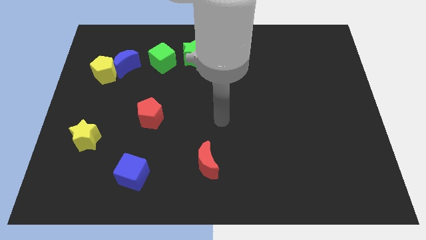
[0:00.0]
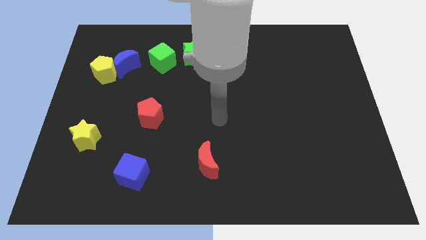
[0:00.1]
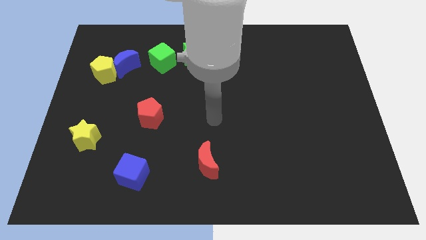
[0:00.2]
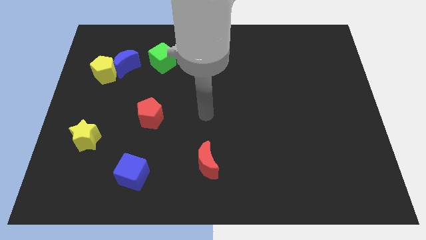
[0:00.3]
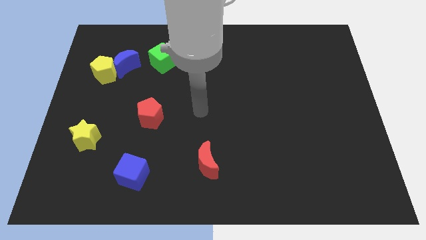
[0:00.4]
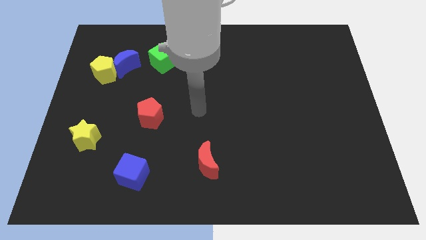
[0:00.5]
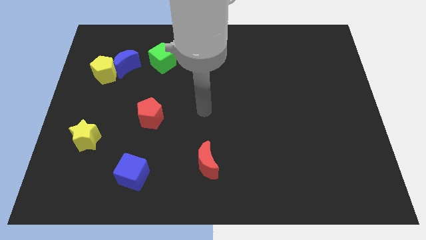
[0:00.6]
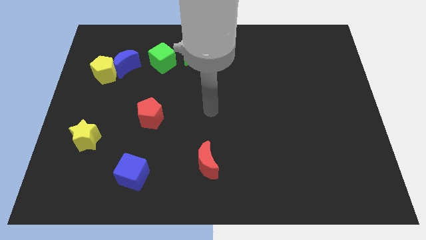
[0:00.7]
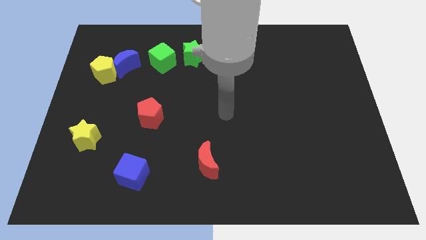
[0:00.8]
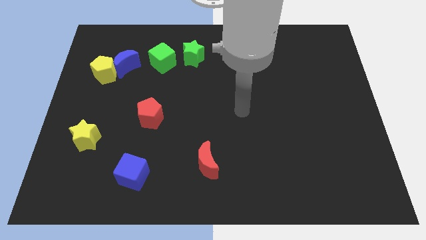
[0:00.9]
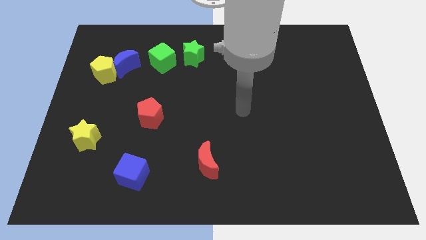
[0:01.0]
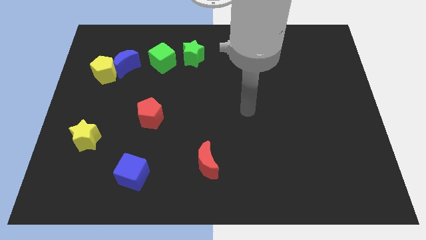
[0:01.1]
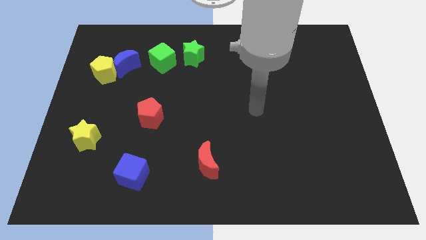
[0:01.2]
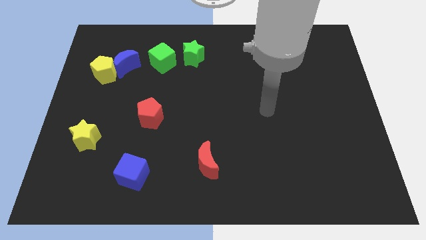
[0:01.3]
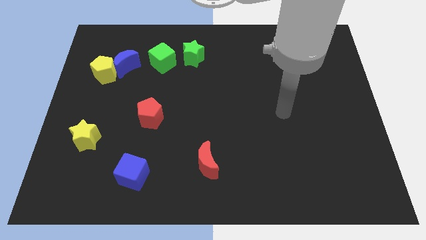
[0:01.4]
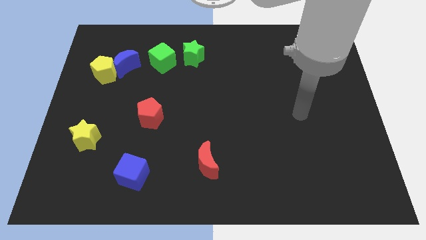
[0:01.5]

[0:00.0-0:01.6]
move your arm towards the right of the board

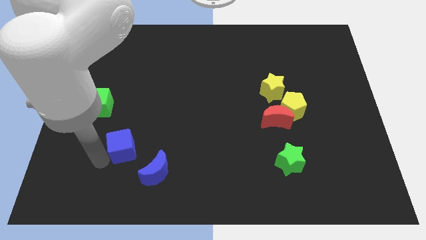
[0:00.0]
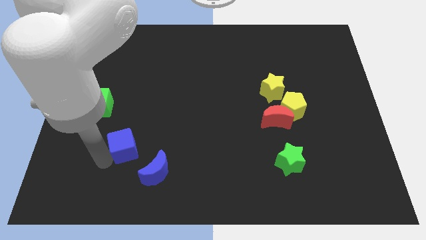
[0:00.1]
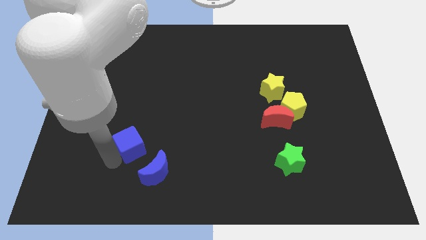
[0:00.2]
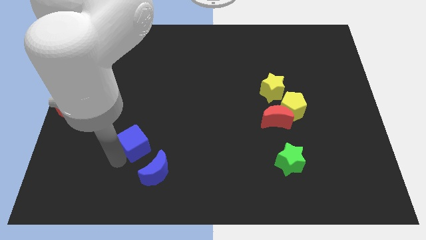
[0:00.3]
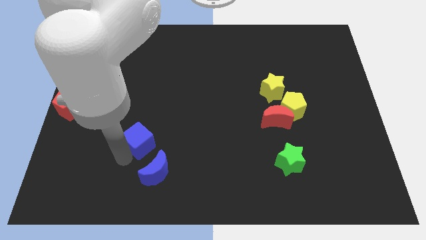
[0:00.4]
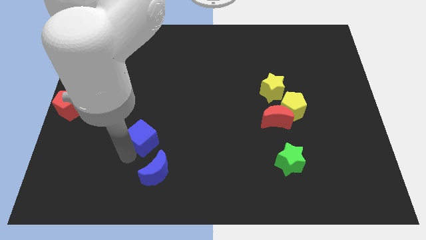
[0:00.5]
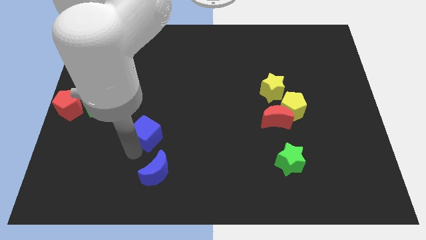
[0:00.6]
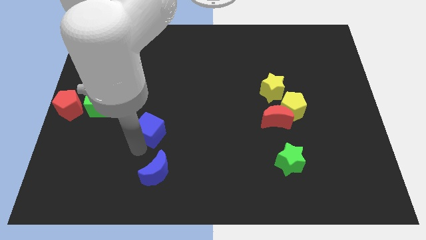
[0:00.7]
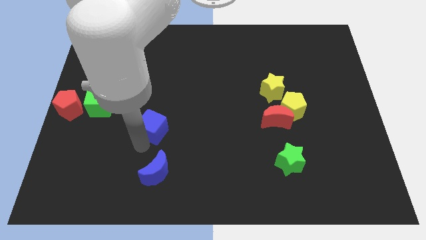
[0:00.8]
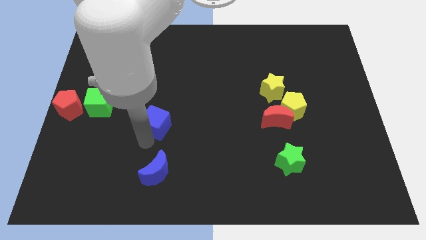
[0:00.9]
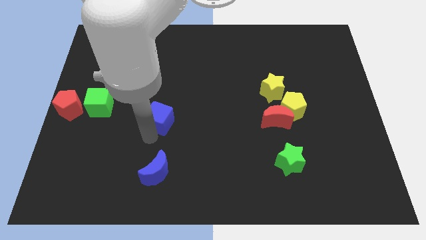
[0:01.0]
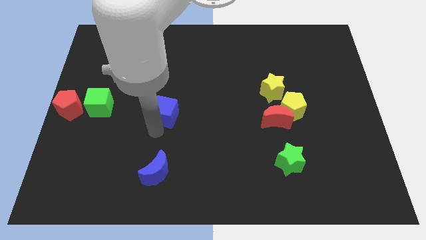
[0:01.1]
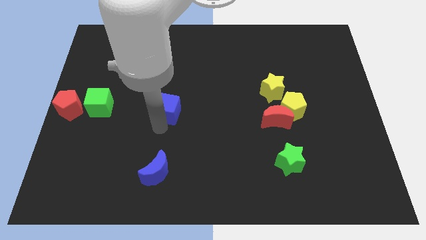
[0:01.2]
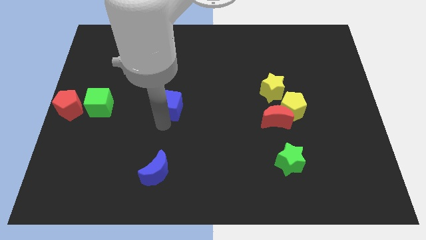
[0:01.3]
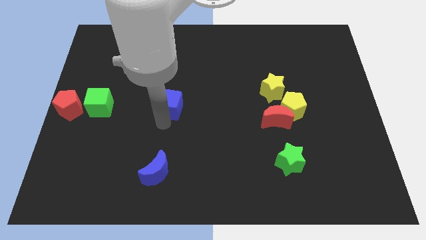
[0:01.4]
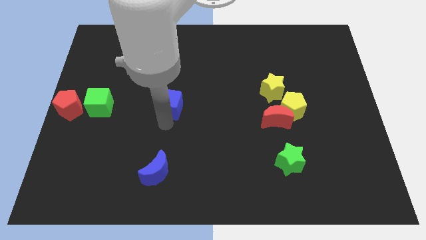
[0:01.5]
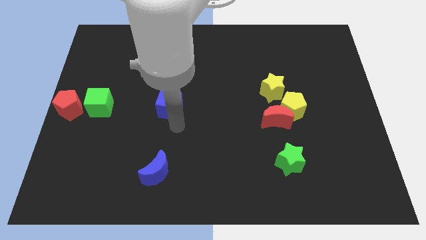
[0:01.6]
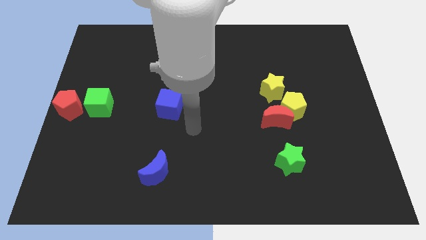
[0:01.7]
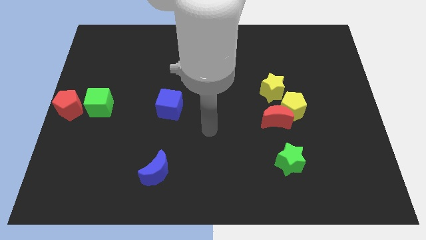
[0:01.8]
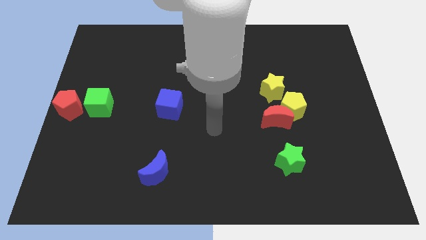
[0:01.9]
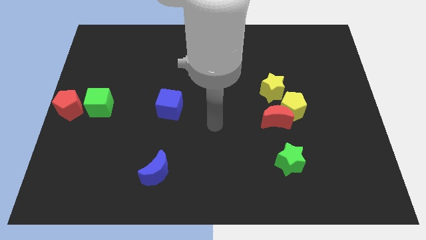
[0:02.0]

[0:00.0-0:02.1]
move blue cube to the right of green cube

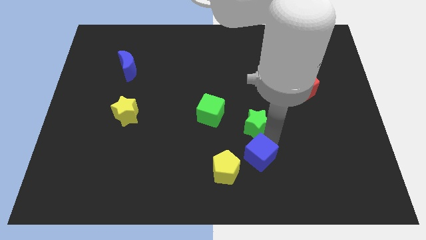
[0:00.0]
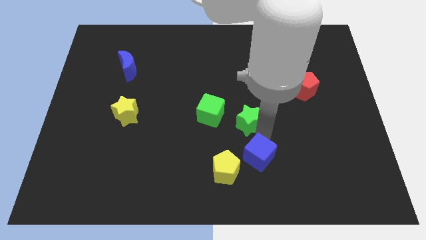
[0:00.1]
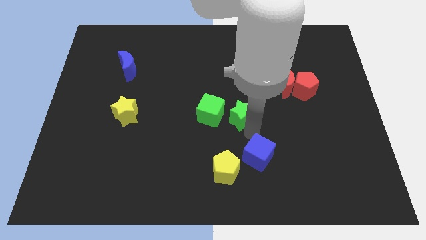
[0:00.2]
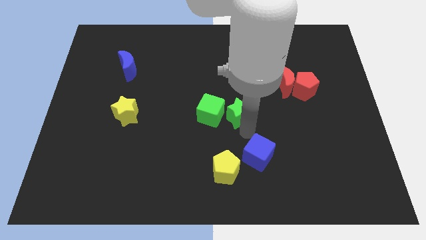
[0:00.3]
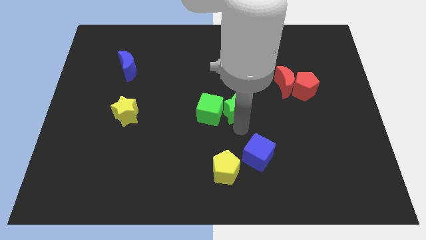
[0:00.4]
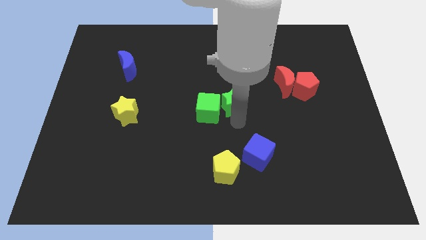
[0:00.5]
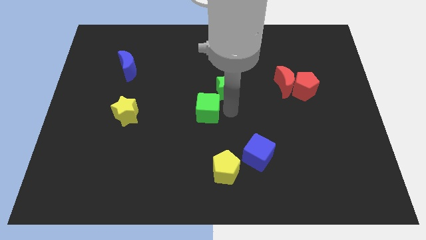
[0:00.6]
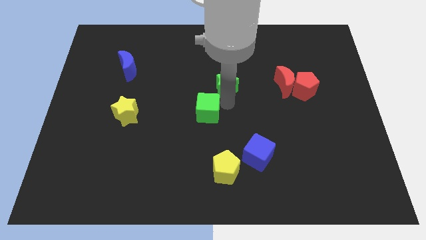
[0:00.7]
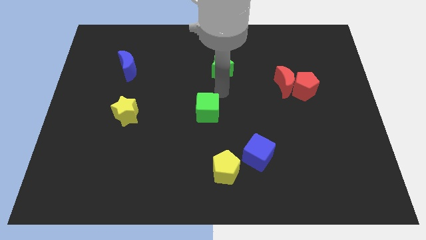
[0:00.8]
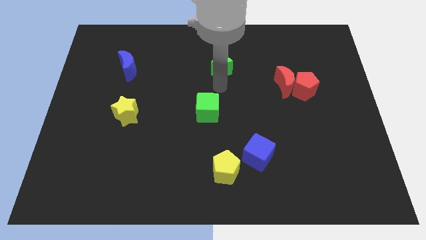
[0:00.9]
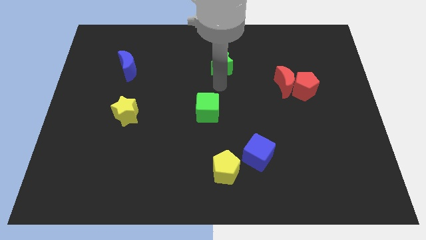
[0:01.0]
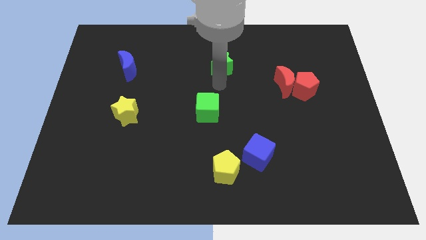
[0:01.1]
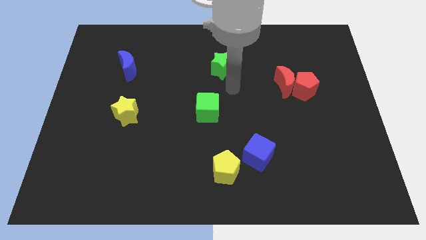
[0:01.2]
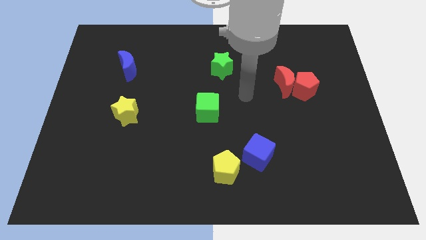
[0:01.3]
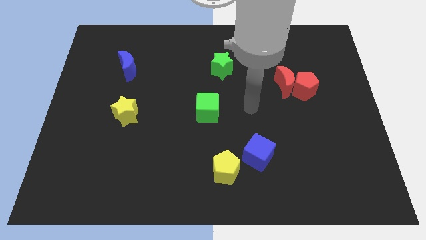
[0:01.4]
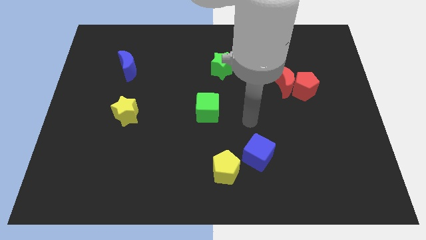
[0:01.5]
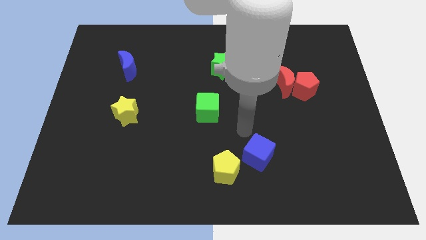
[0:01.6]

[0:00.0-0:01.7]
place the green star horizontally right to the blue moon

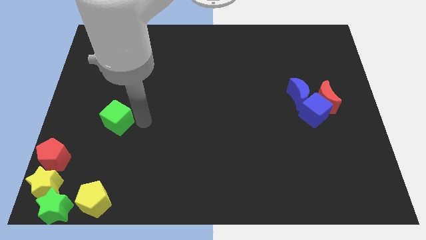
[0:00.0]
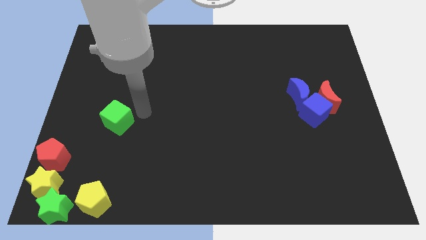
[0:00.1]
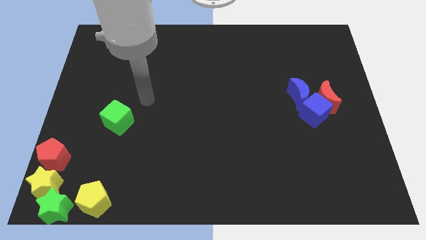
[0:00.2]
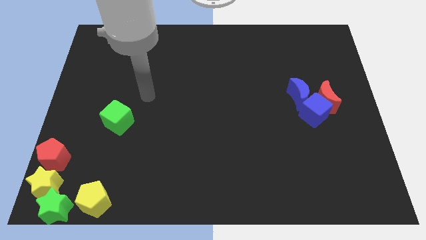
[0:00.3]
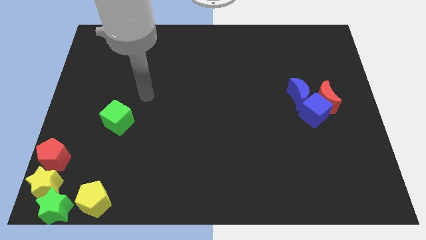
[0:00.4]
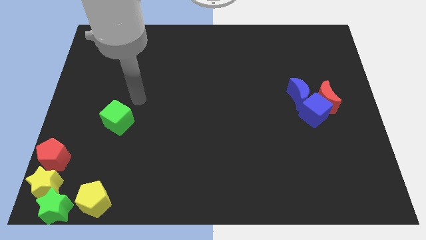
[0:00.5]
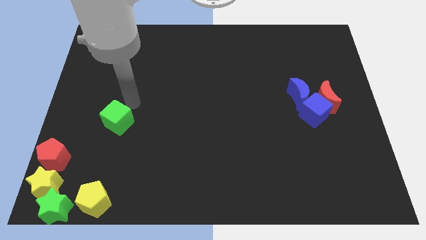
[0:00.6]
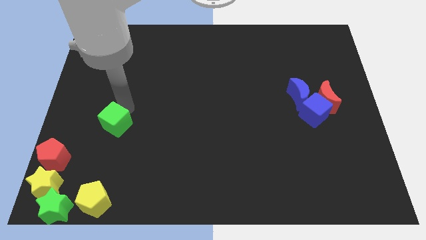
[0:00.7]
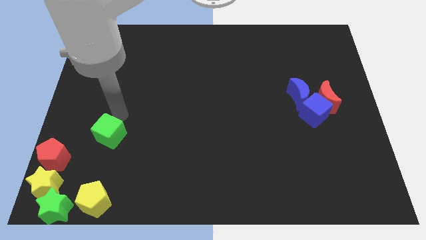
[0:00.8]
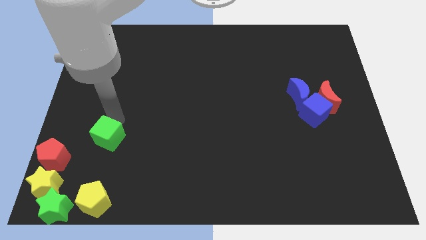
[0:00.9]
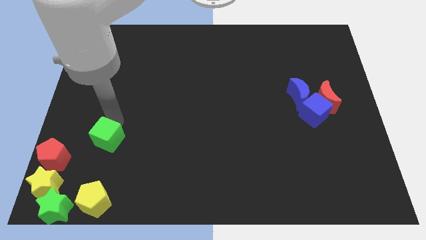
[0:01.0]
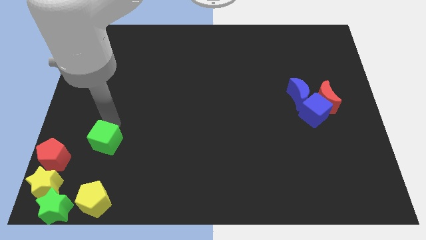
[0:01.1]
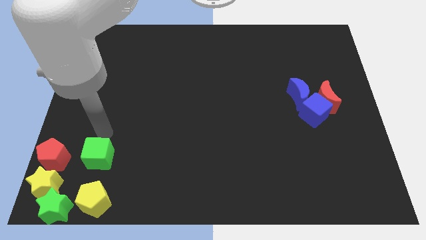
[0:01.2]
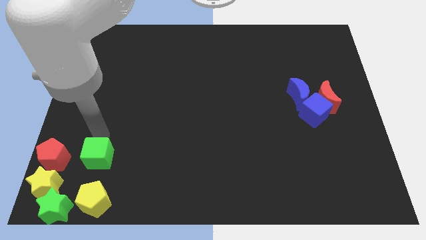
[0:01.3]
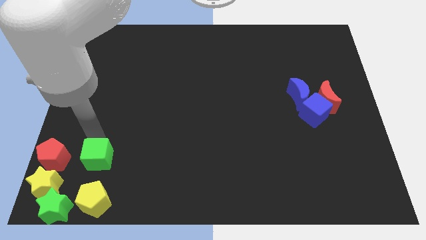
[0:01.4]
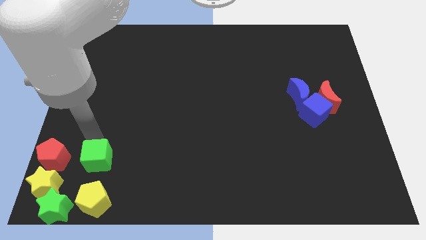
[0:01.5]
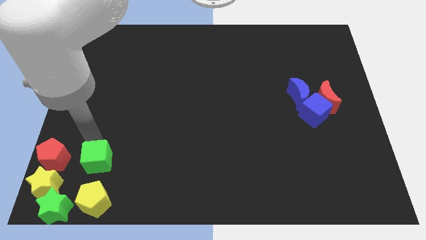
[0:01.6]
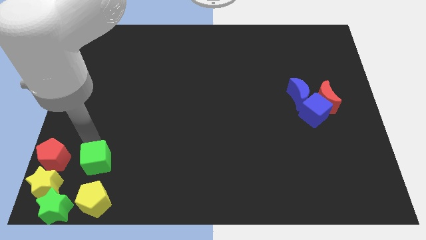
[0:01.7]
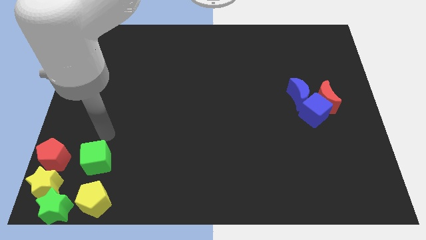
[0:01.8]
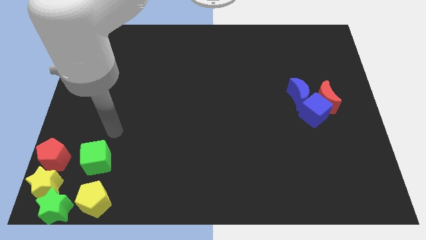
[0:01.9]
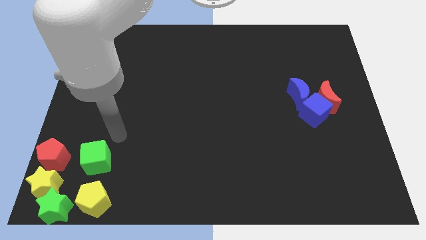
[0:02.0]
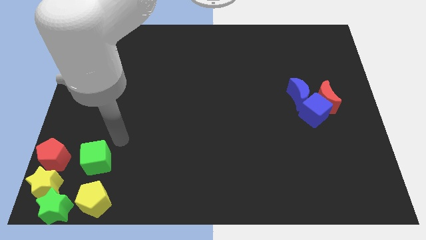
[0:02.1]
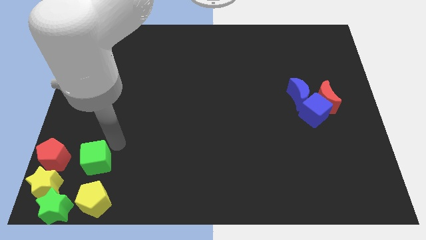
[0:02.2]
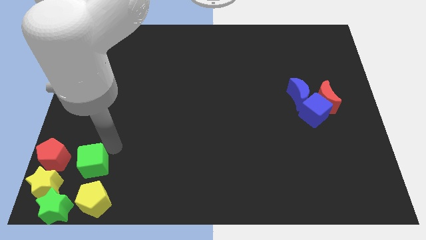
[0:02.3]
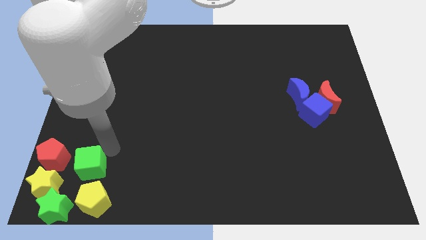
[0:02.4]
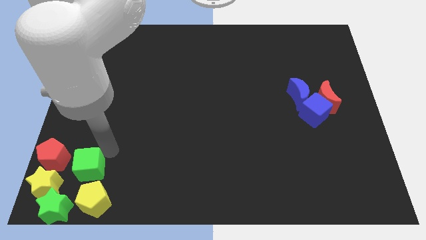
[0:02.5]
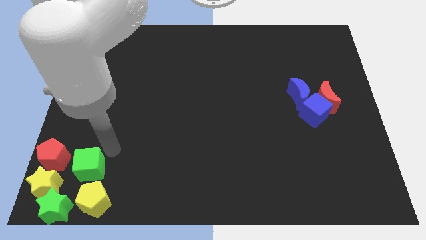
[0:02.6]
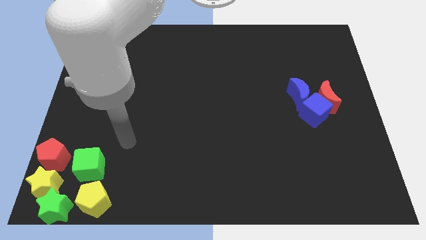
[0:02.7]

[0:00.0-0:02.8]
place the green cube above the yellow pentagon

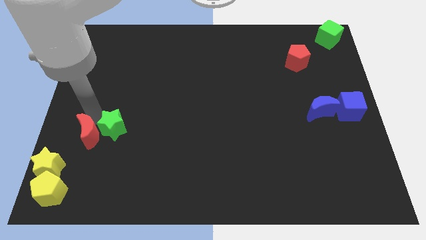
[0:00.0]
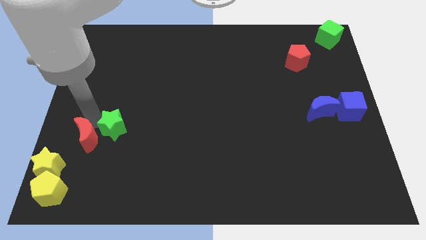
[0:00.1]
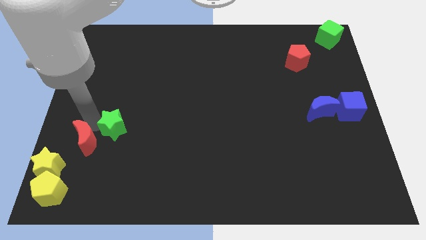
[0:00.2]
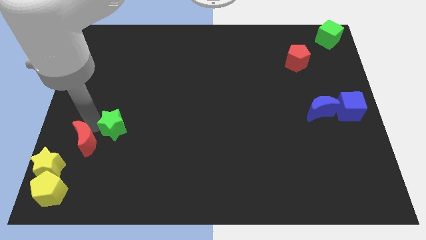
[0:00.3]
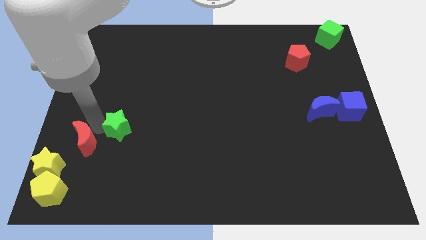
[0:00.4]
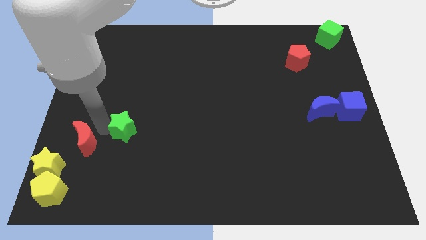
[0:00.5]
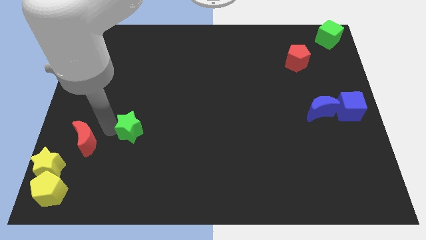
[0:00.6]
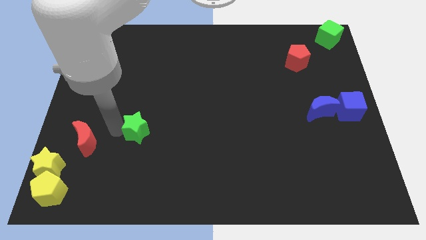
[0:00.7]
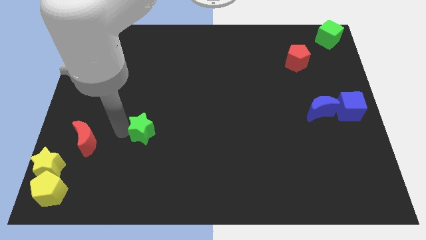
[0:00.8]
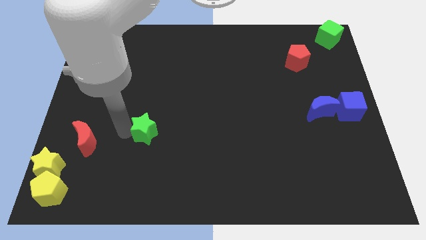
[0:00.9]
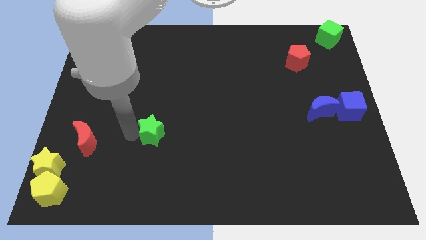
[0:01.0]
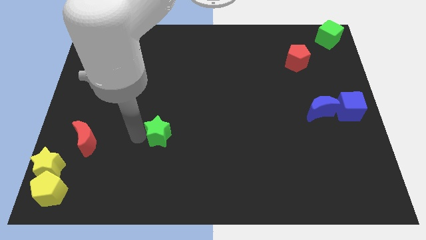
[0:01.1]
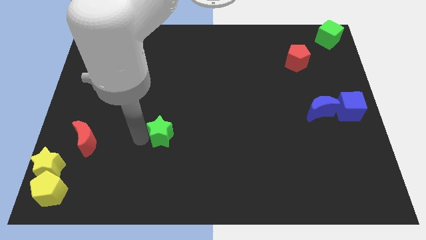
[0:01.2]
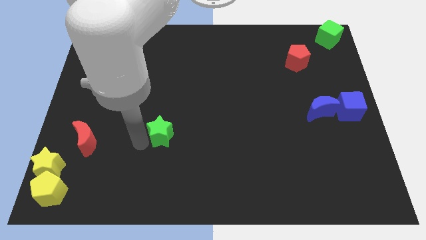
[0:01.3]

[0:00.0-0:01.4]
separate the green star from the red crescent
